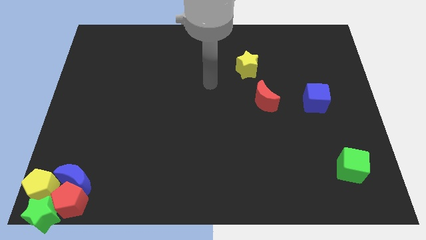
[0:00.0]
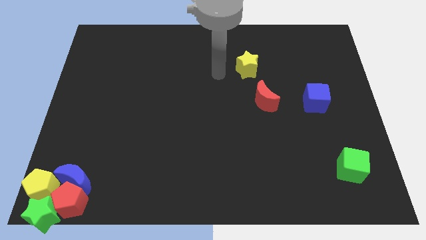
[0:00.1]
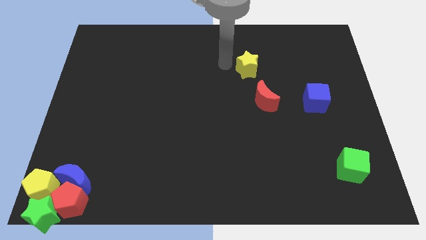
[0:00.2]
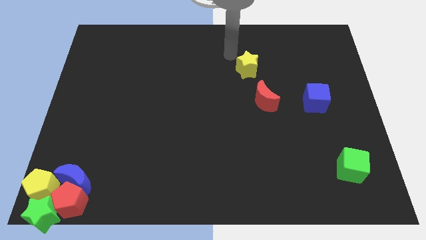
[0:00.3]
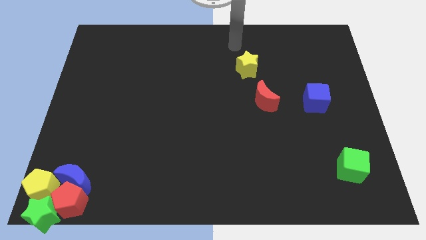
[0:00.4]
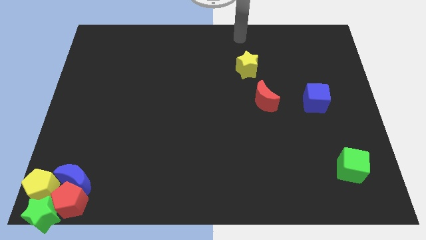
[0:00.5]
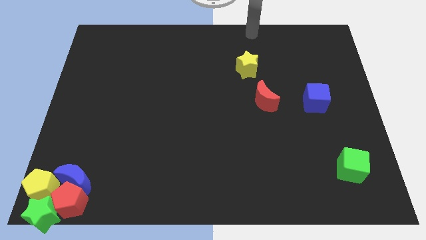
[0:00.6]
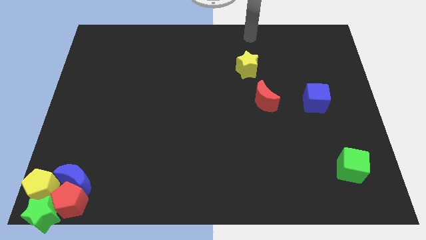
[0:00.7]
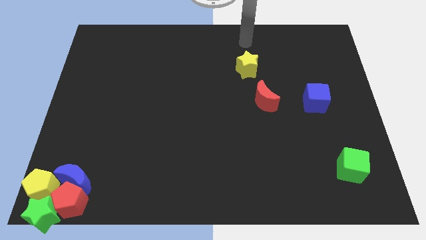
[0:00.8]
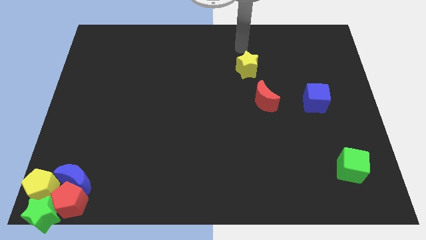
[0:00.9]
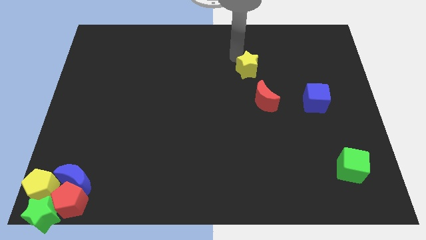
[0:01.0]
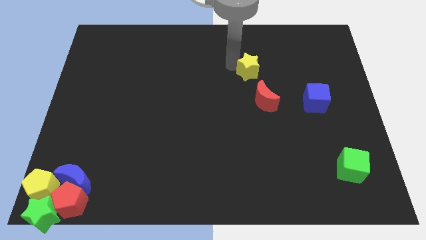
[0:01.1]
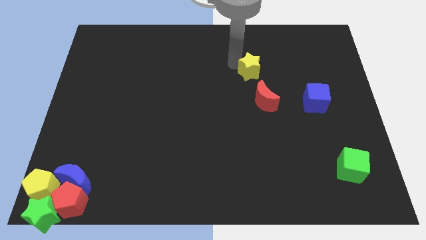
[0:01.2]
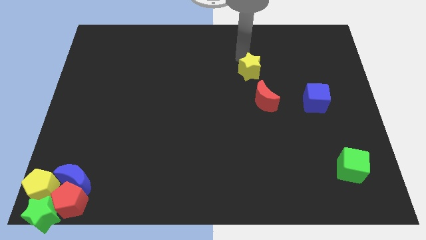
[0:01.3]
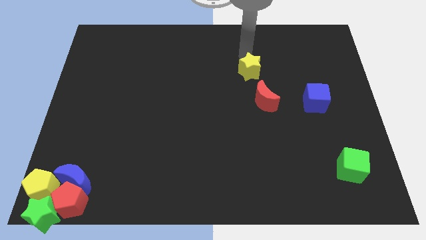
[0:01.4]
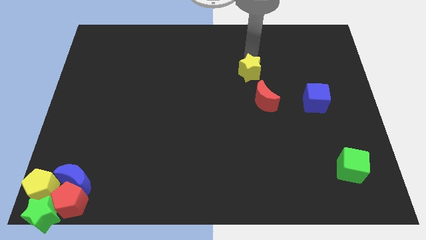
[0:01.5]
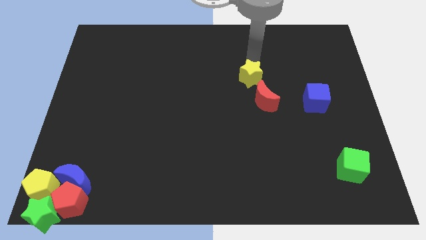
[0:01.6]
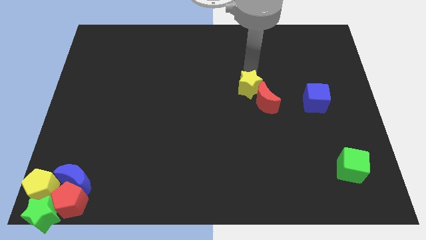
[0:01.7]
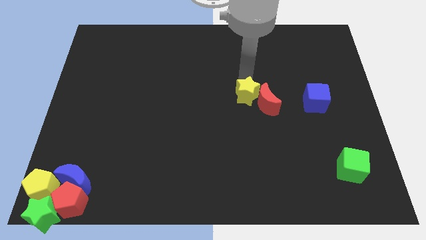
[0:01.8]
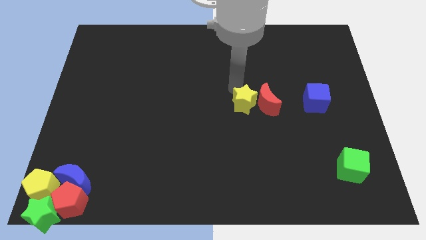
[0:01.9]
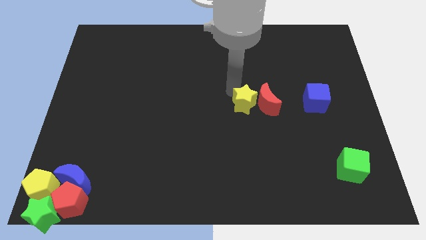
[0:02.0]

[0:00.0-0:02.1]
push the yellow star left to the red moon

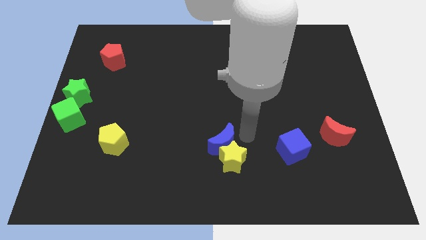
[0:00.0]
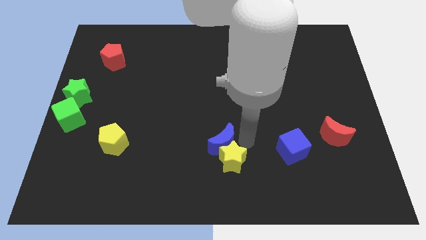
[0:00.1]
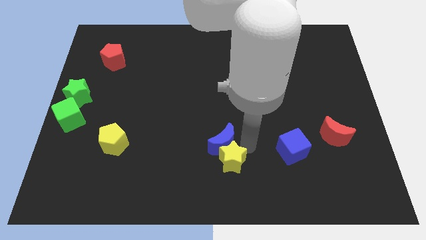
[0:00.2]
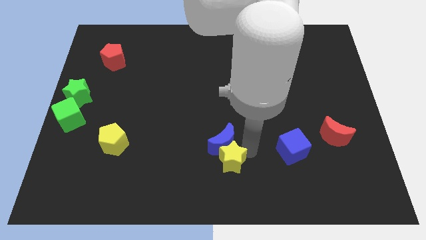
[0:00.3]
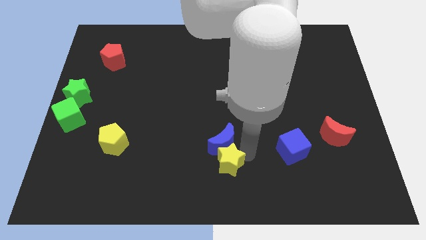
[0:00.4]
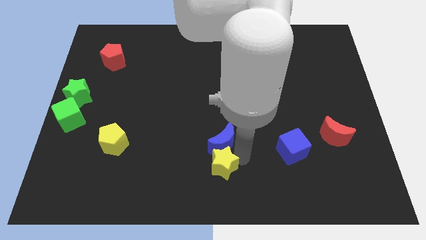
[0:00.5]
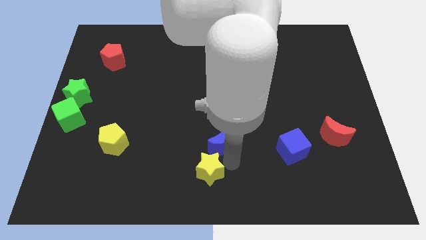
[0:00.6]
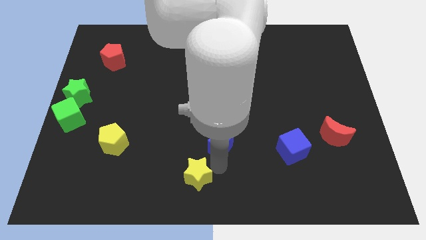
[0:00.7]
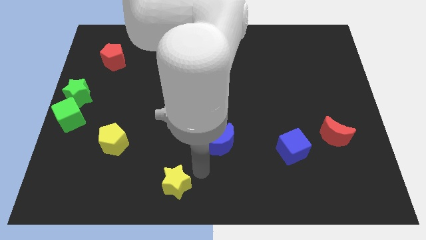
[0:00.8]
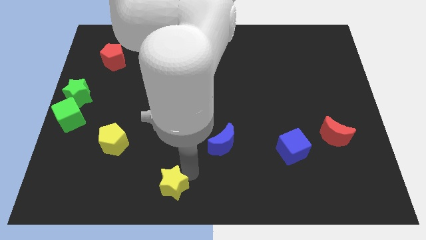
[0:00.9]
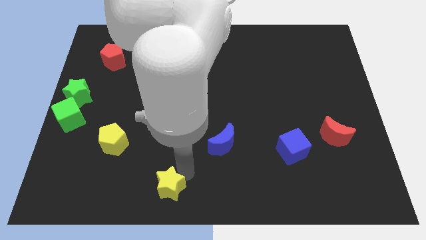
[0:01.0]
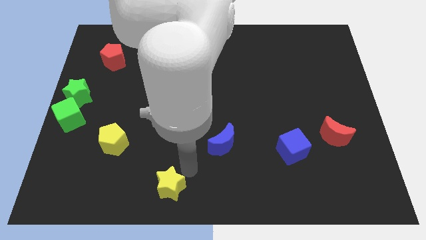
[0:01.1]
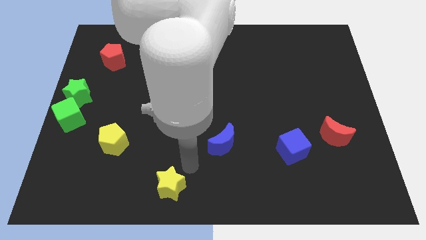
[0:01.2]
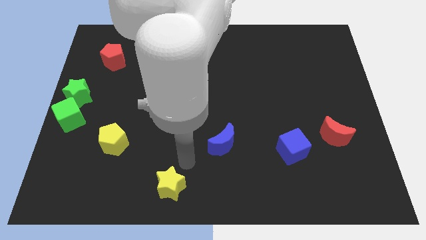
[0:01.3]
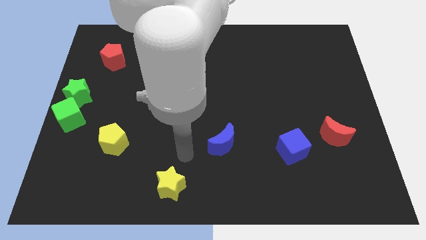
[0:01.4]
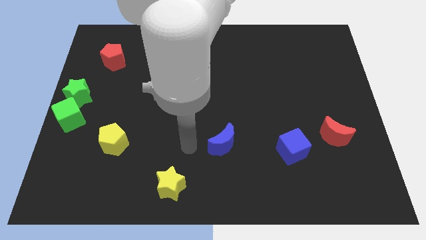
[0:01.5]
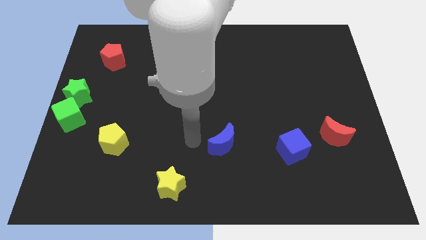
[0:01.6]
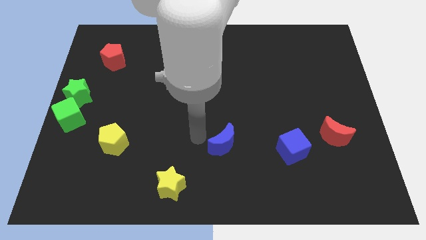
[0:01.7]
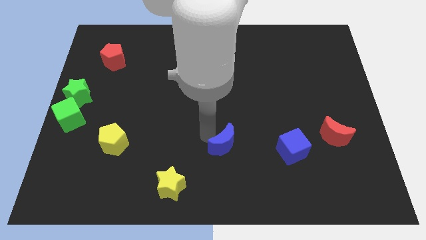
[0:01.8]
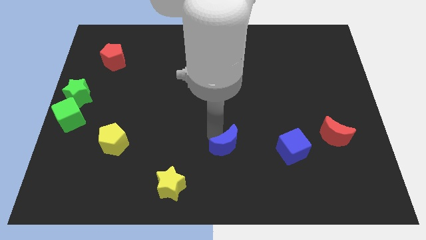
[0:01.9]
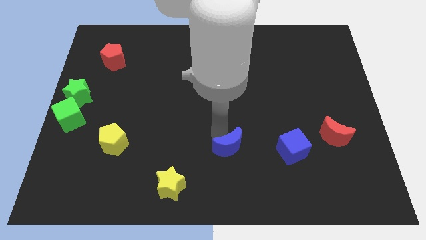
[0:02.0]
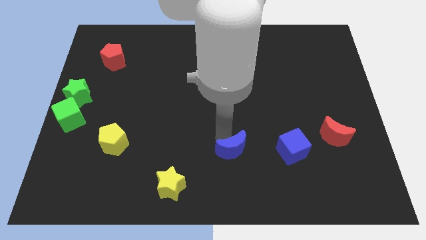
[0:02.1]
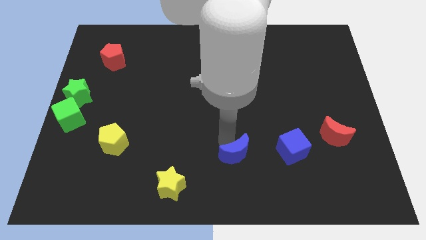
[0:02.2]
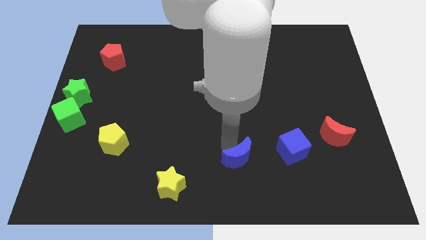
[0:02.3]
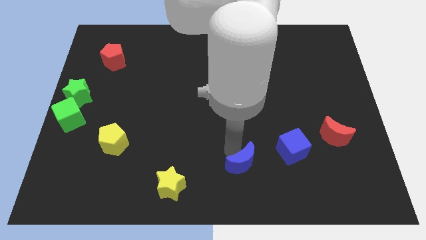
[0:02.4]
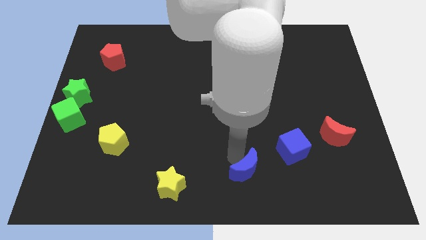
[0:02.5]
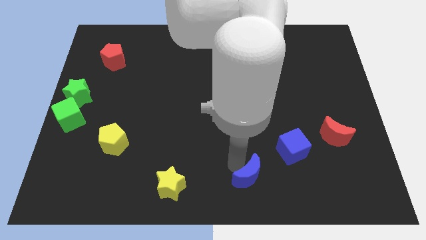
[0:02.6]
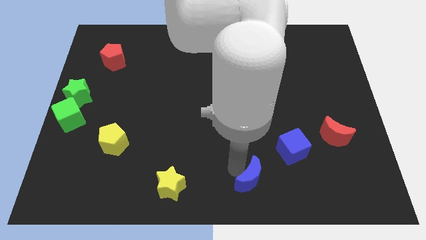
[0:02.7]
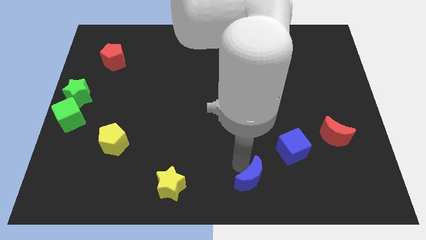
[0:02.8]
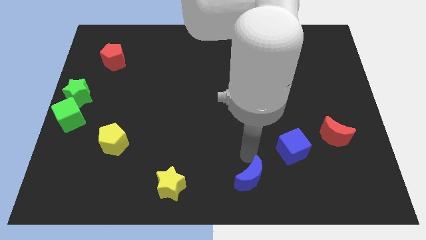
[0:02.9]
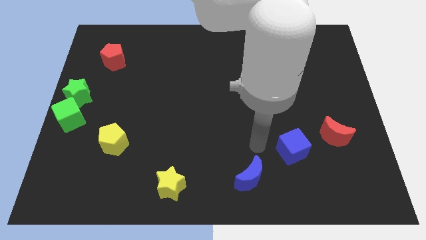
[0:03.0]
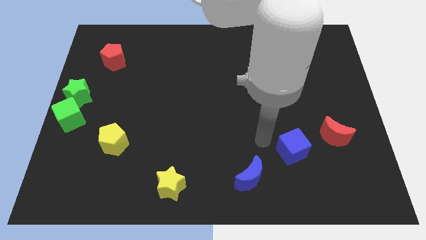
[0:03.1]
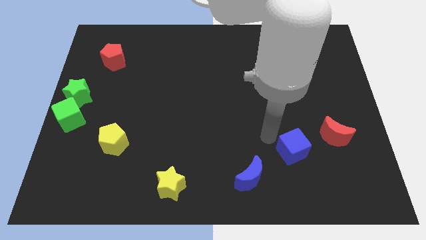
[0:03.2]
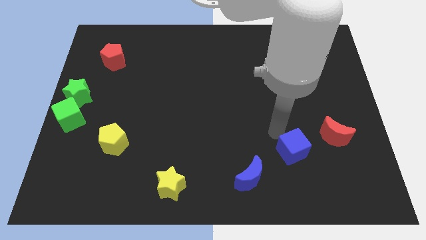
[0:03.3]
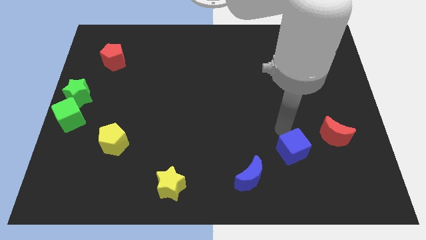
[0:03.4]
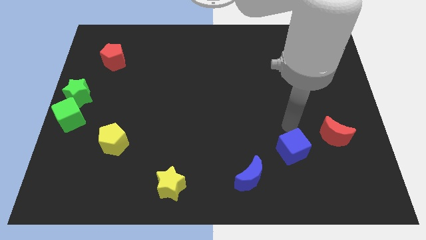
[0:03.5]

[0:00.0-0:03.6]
separate yellow star and blue crescent

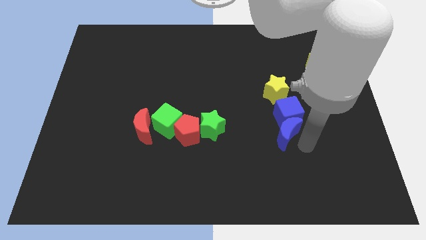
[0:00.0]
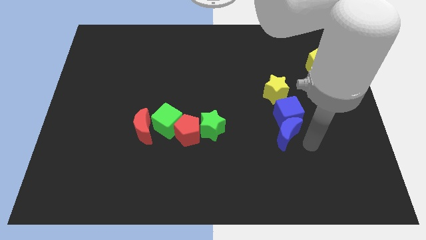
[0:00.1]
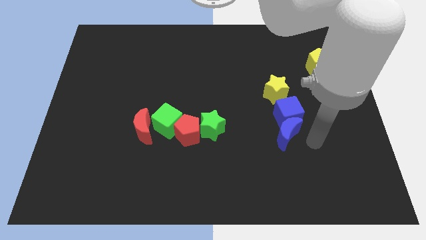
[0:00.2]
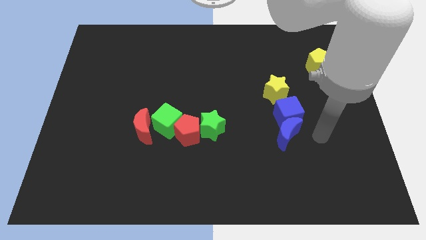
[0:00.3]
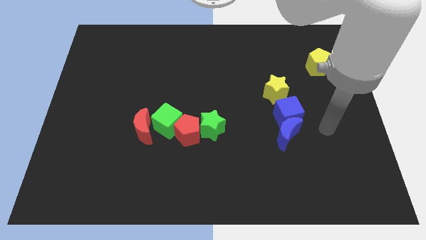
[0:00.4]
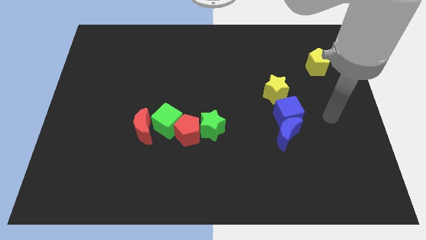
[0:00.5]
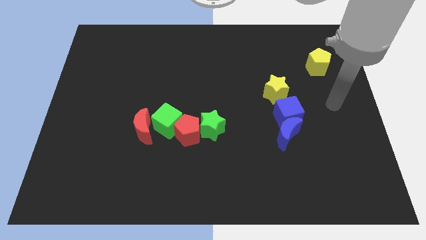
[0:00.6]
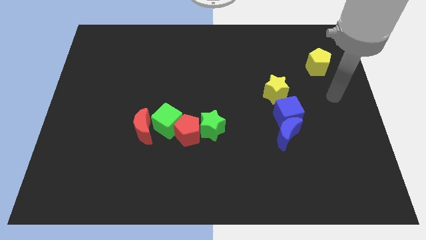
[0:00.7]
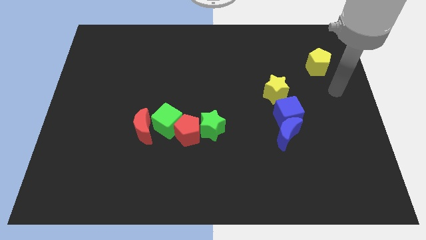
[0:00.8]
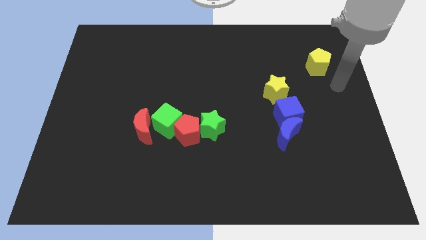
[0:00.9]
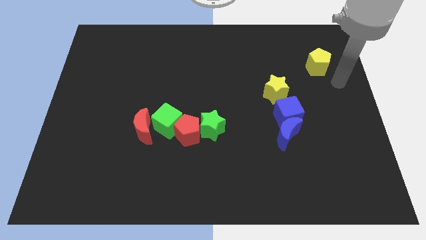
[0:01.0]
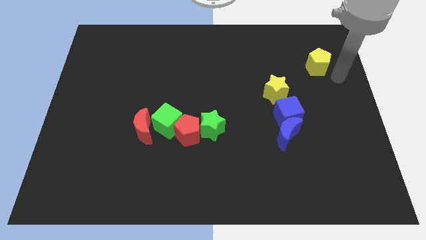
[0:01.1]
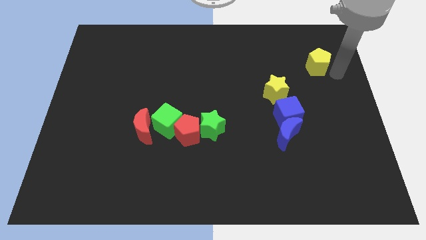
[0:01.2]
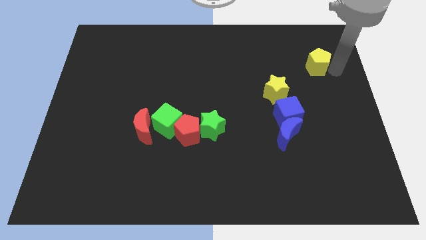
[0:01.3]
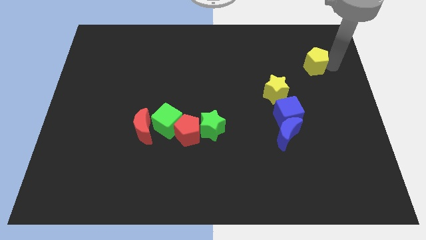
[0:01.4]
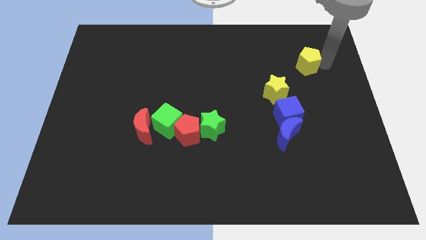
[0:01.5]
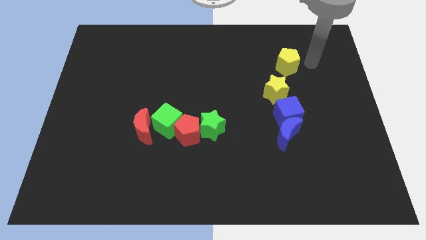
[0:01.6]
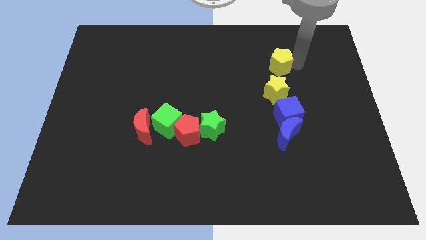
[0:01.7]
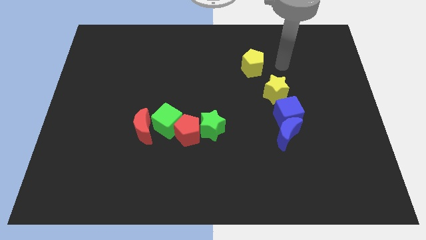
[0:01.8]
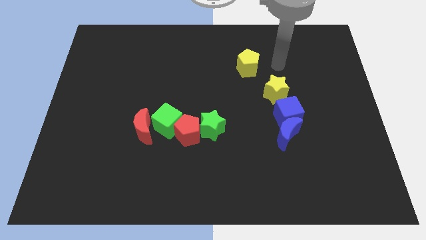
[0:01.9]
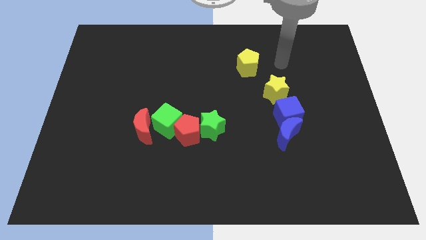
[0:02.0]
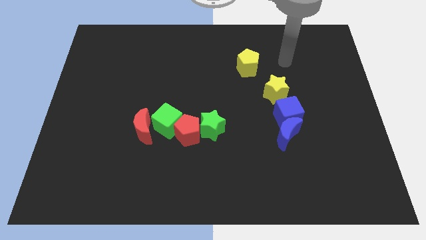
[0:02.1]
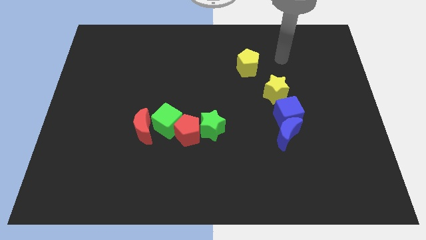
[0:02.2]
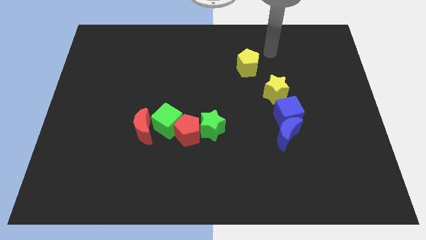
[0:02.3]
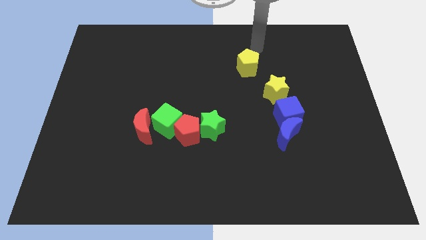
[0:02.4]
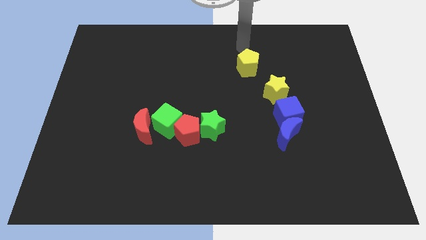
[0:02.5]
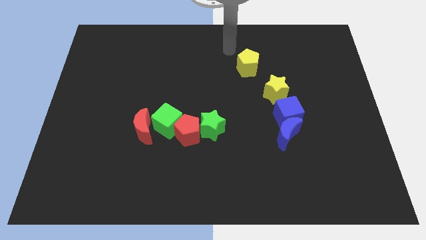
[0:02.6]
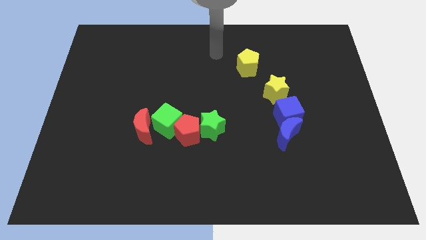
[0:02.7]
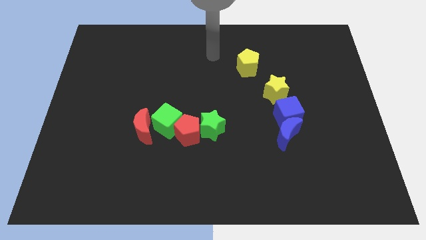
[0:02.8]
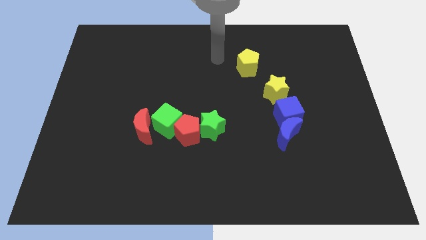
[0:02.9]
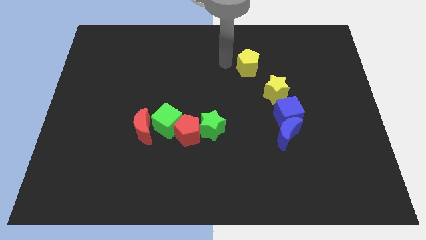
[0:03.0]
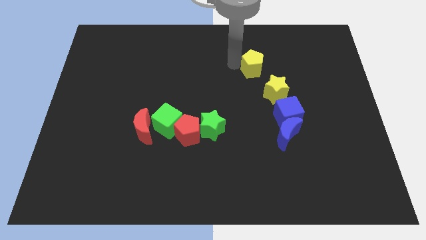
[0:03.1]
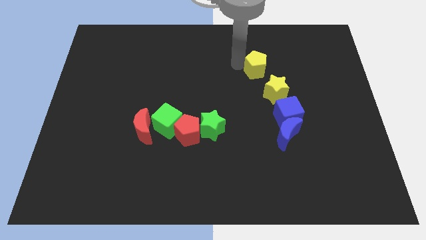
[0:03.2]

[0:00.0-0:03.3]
push the yellow pentagon to the top left of the yellow star

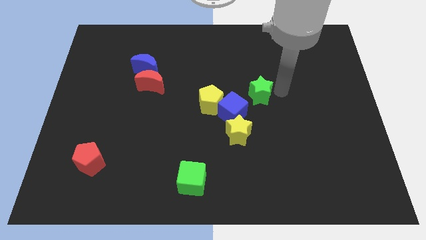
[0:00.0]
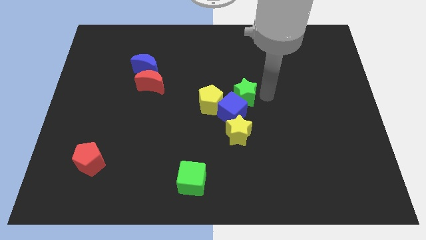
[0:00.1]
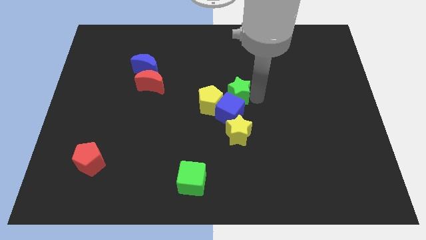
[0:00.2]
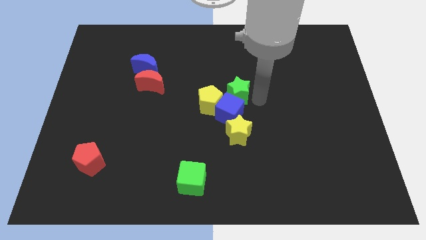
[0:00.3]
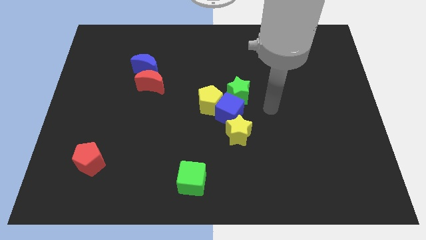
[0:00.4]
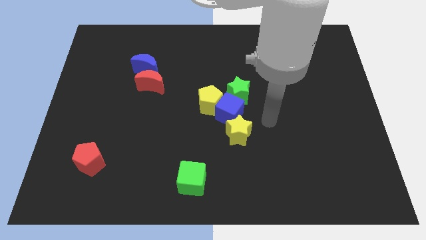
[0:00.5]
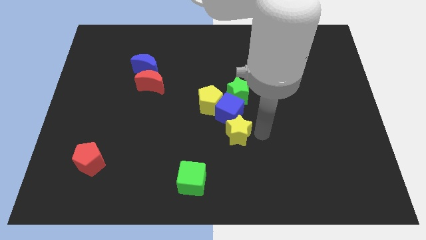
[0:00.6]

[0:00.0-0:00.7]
move green star slightly left
